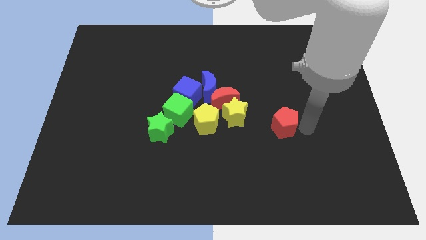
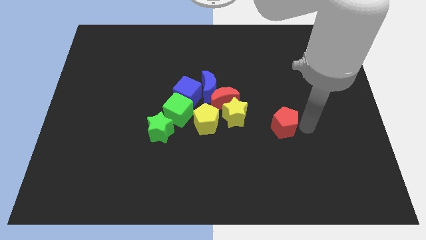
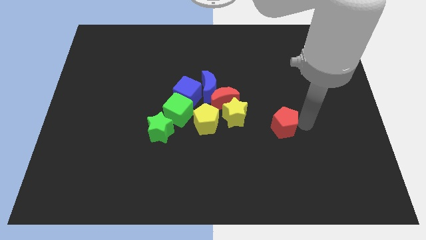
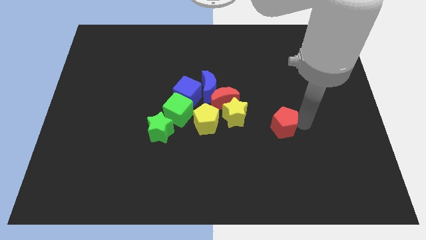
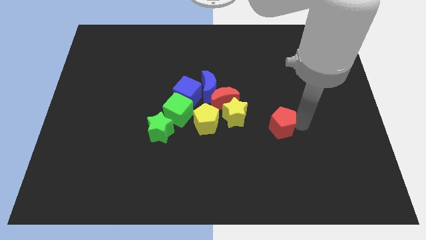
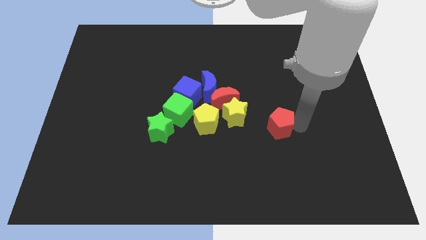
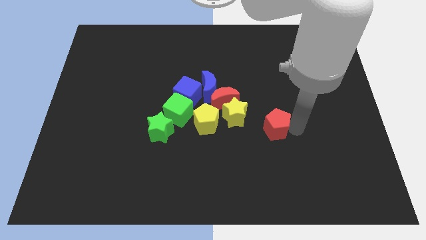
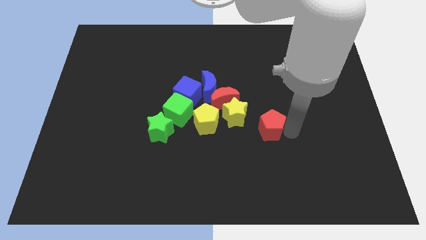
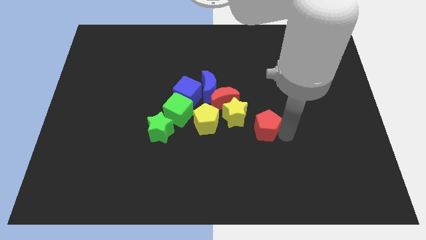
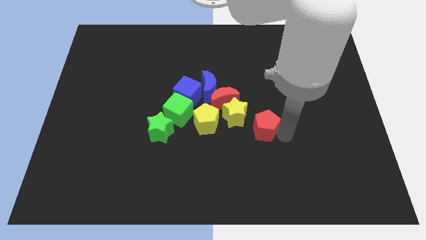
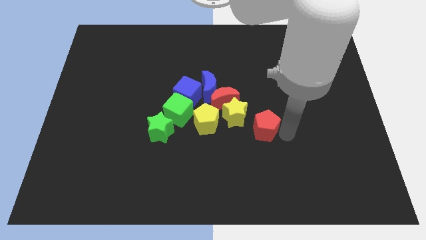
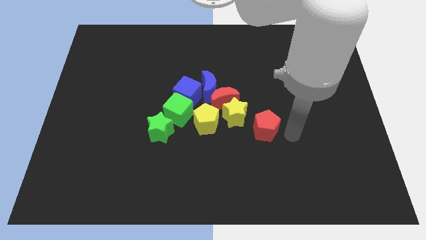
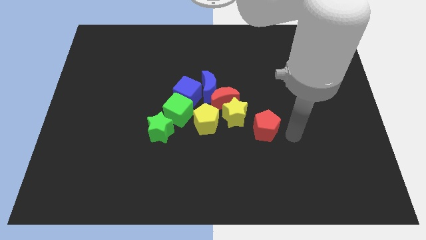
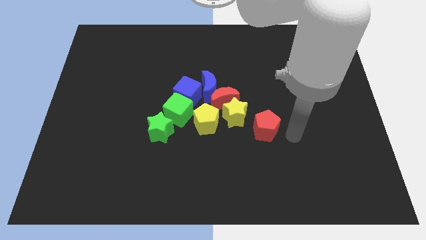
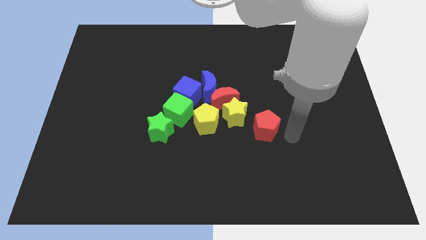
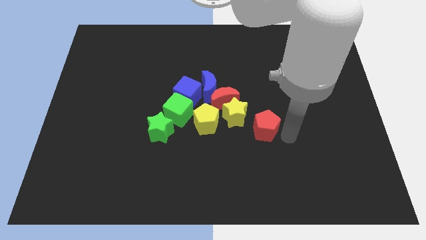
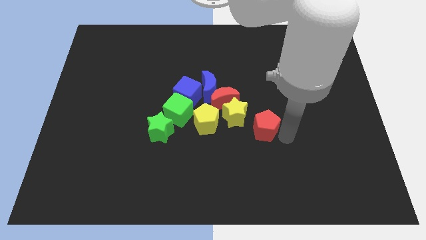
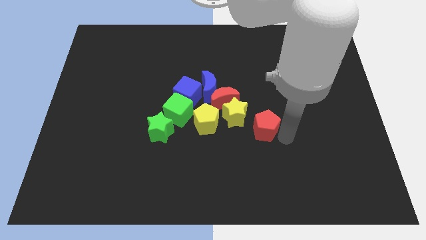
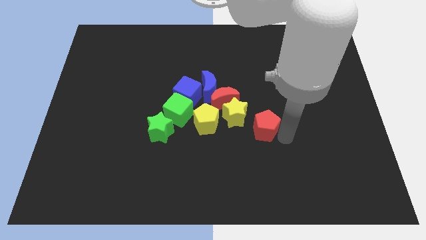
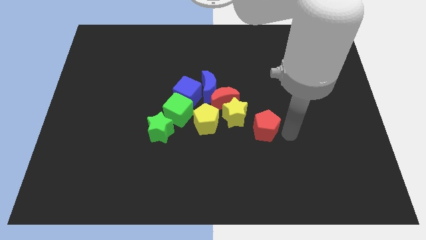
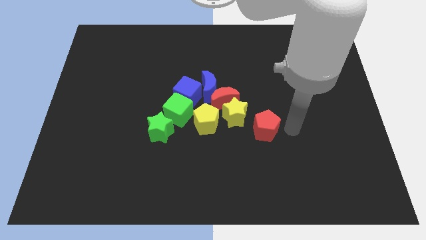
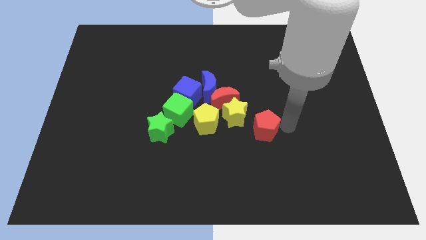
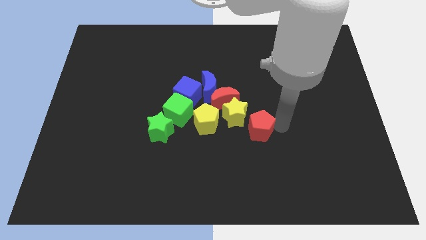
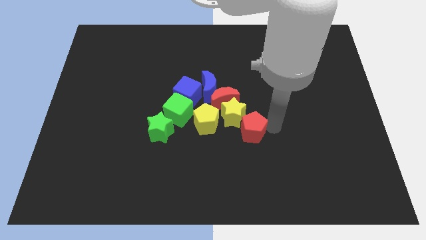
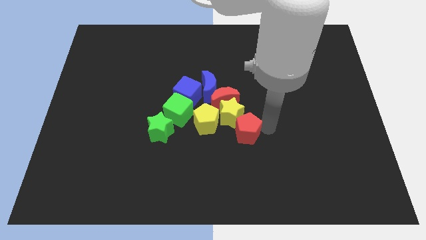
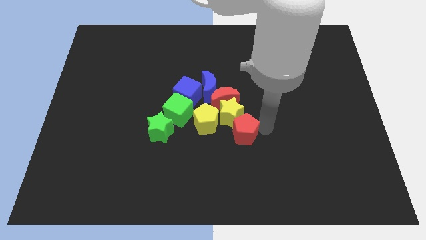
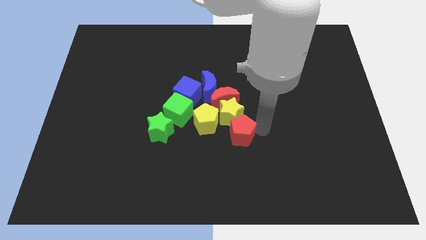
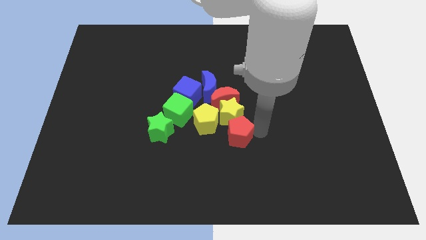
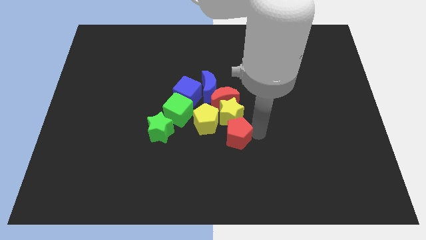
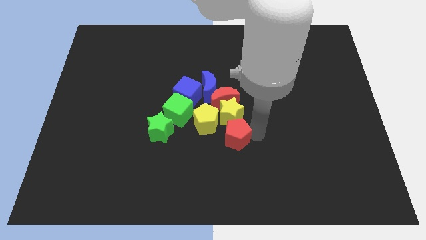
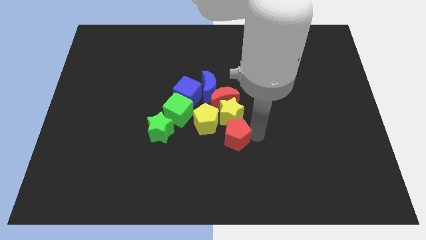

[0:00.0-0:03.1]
push red pentagon below yellow star

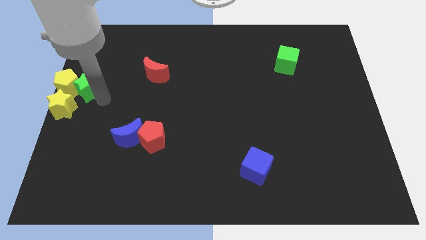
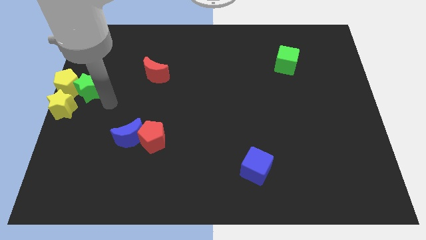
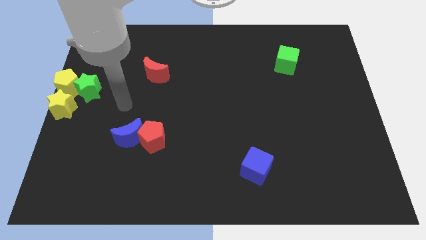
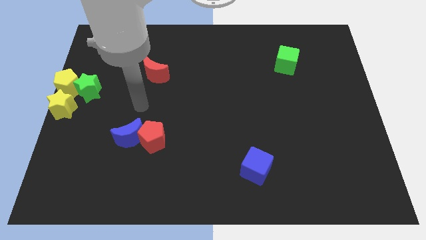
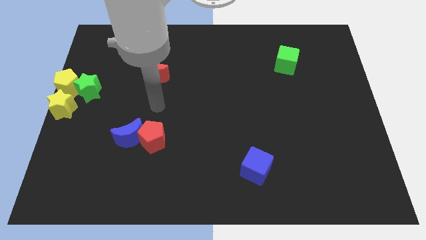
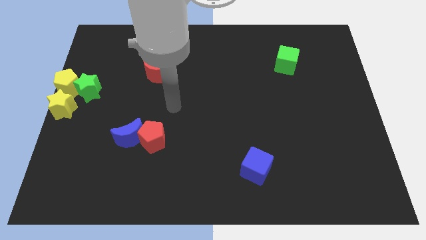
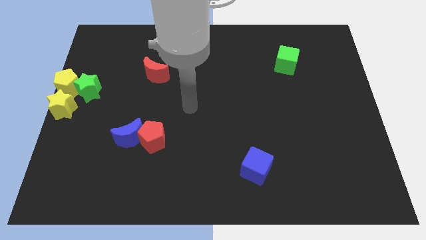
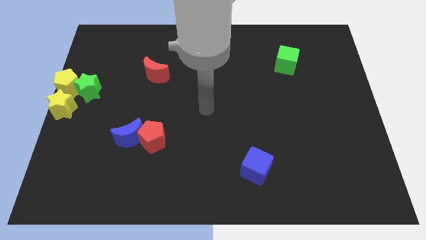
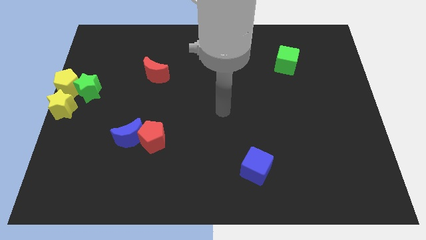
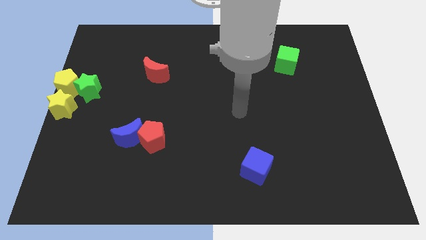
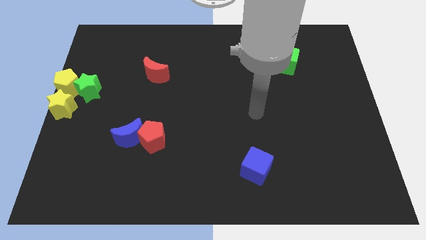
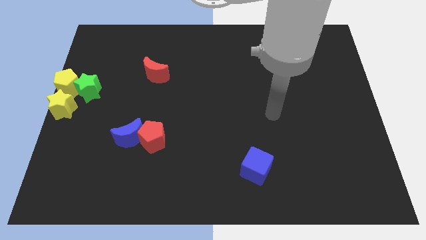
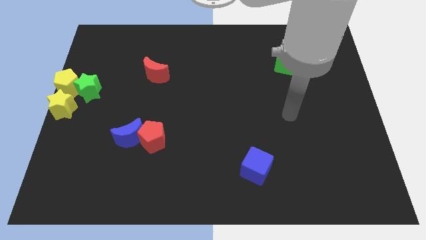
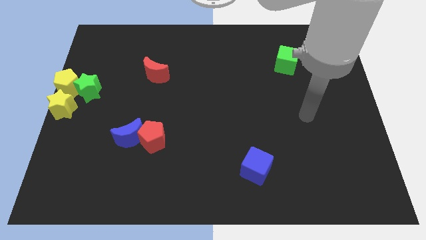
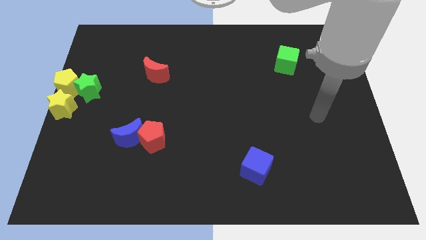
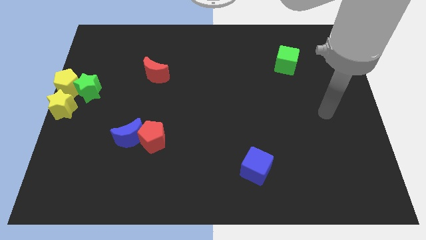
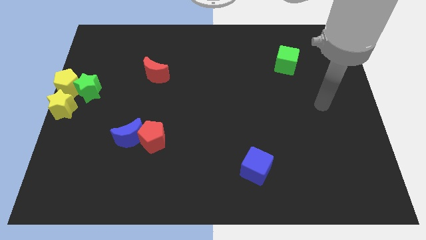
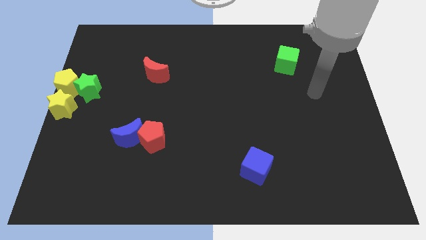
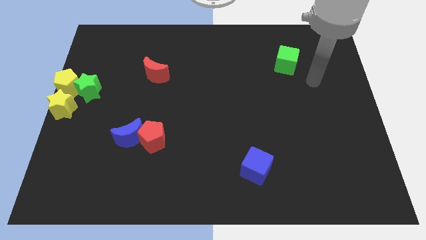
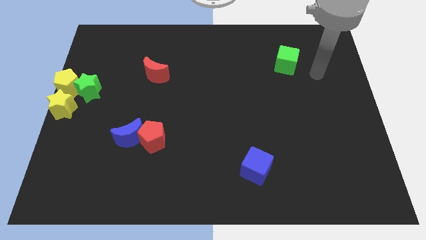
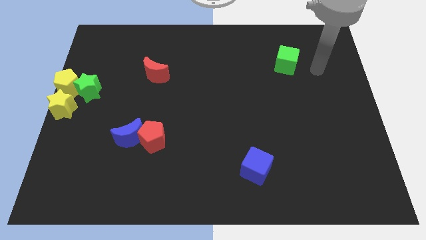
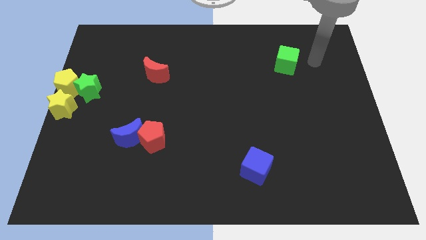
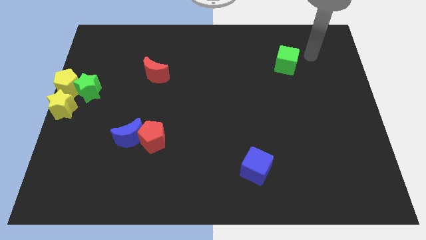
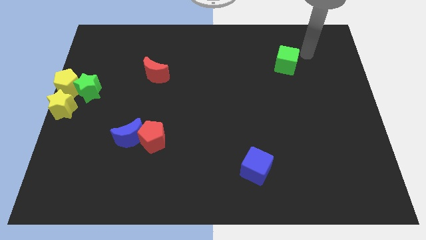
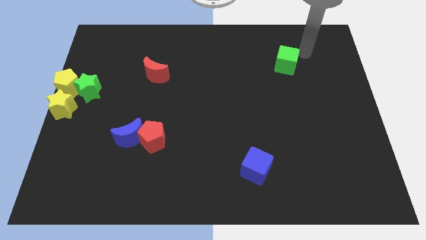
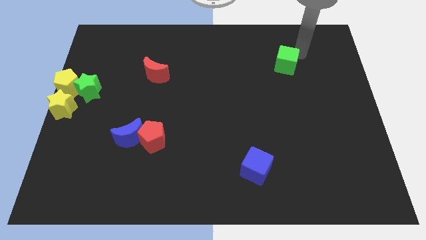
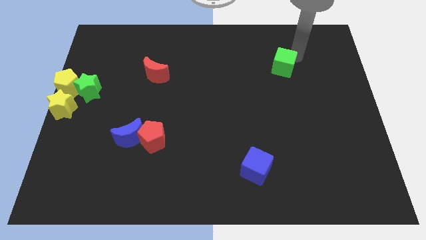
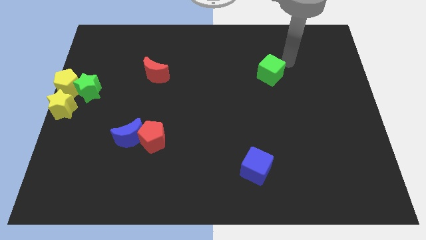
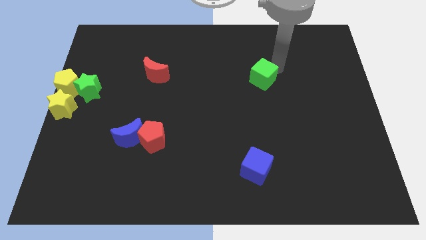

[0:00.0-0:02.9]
move the green cube slightly to the bottom

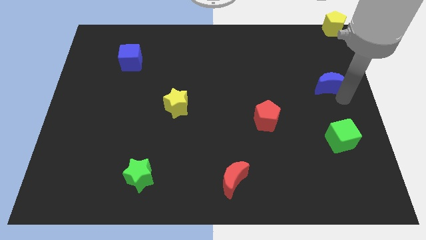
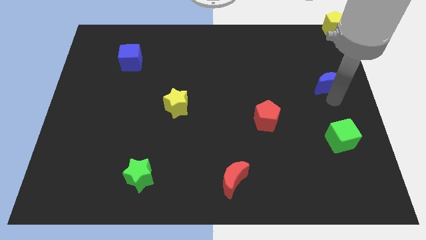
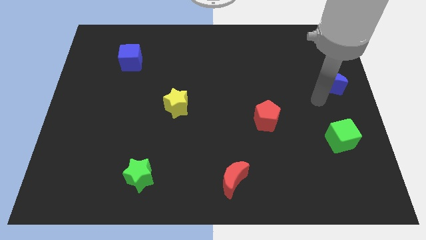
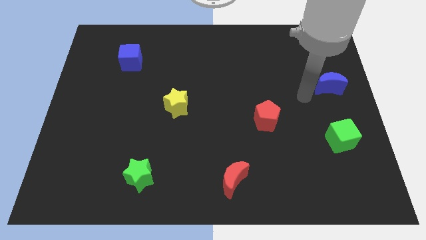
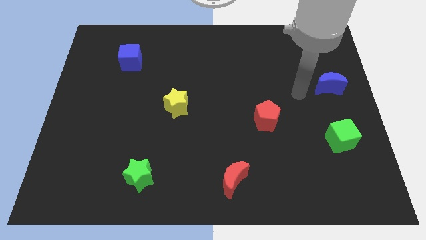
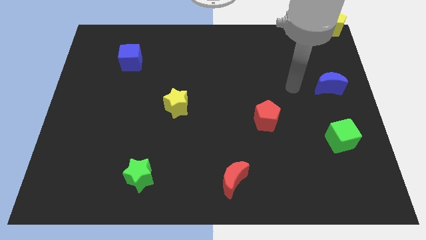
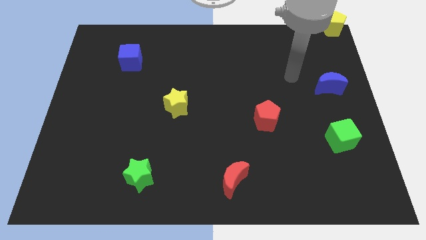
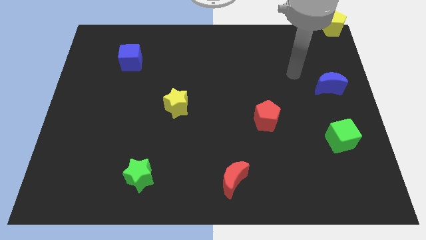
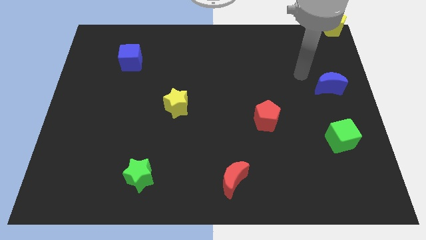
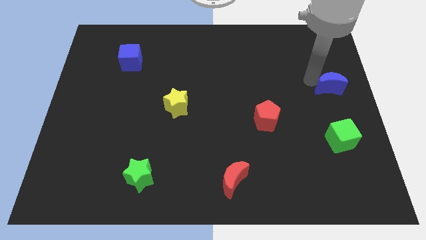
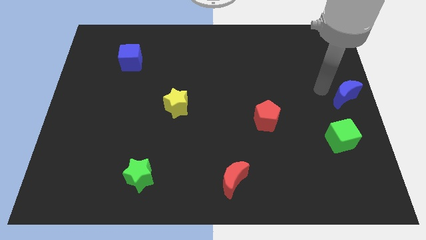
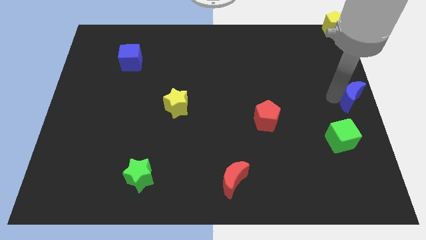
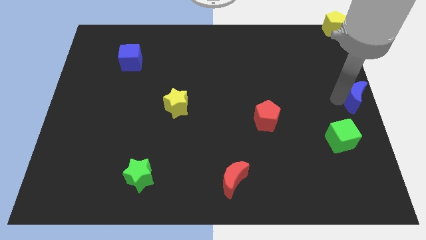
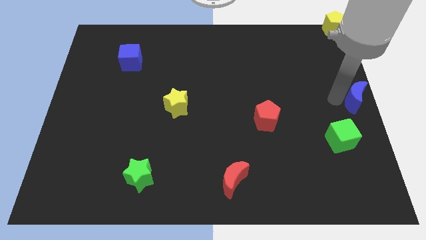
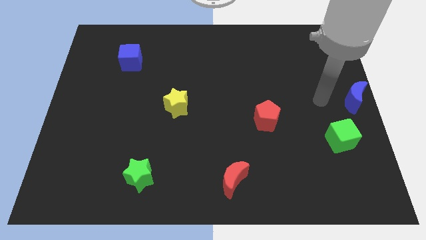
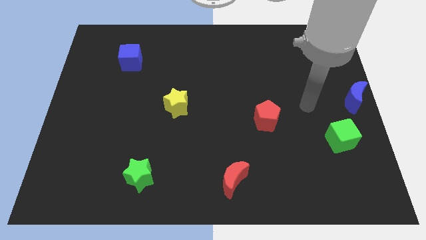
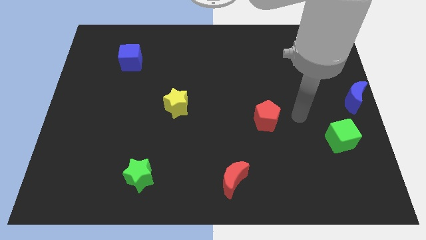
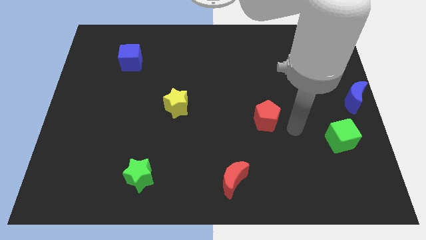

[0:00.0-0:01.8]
push the blue crescent at the center right of the board

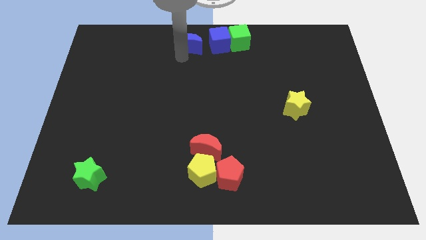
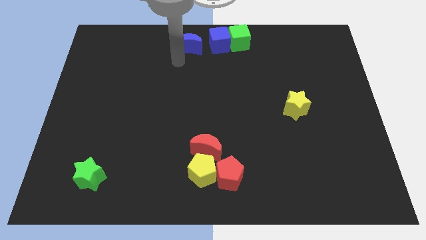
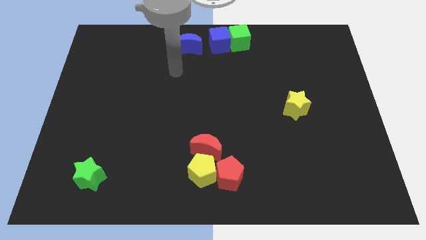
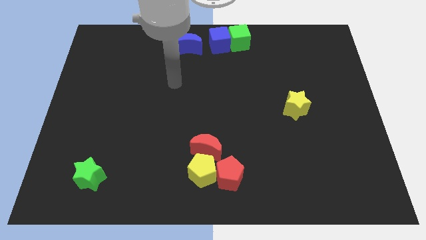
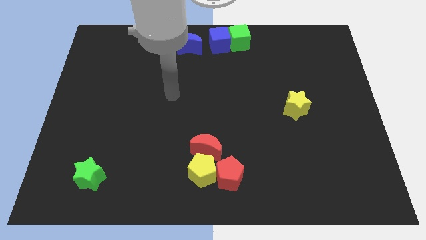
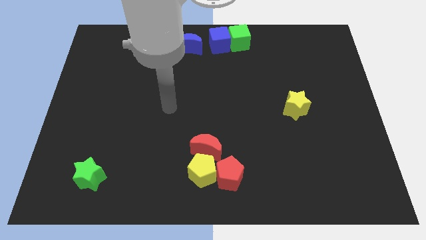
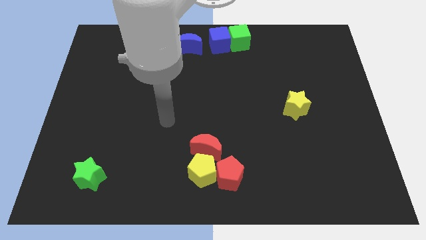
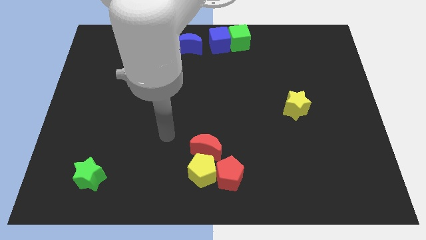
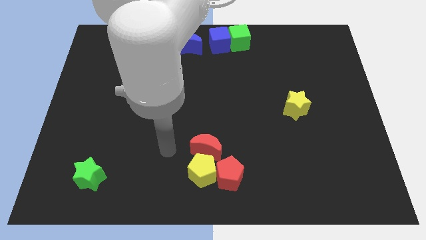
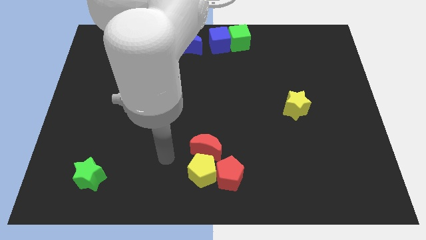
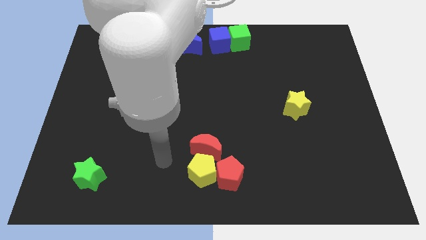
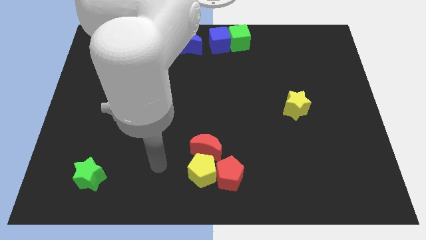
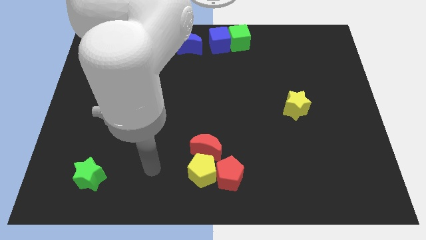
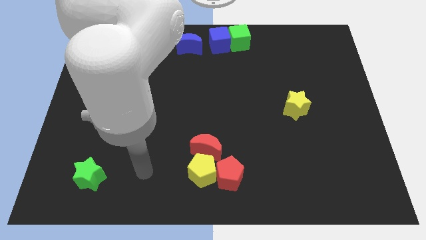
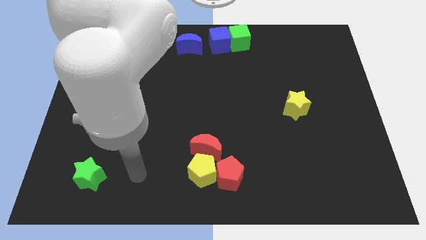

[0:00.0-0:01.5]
move your arm away from the blue moon
